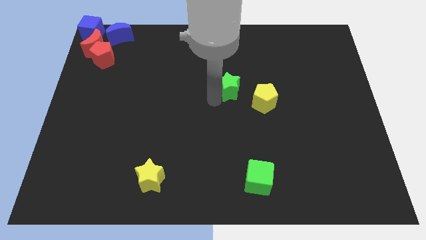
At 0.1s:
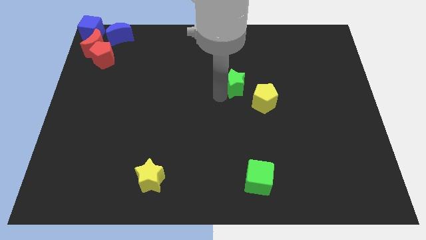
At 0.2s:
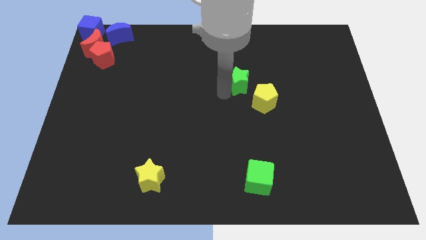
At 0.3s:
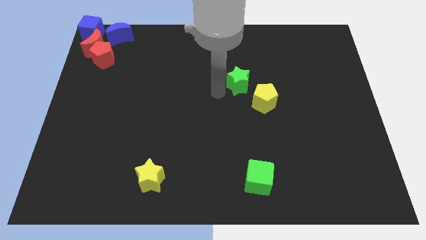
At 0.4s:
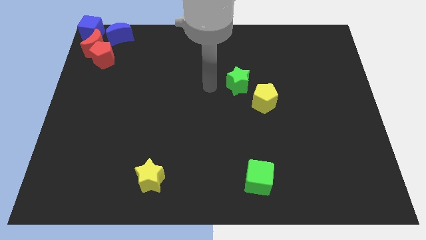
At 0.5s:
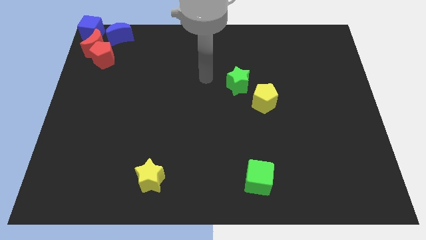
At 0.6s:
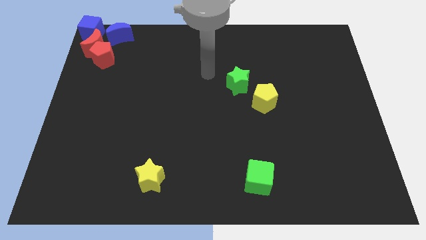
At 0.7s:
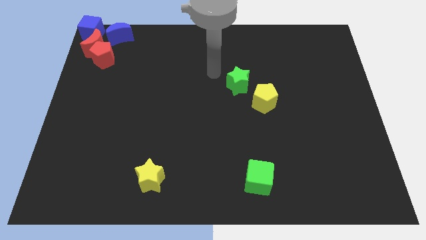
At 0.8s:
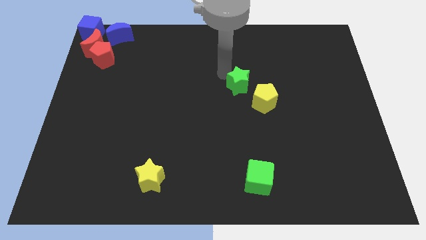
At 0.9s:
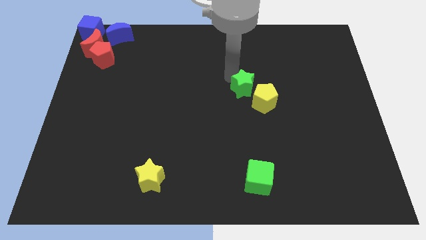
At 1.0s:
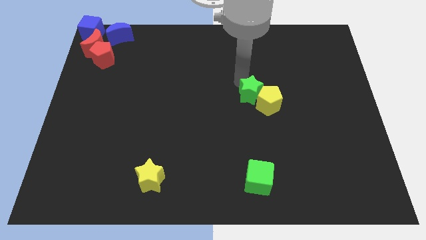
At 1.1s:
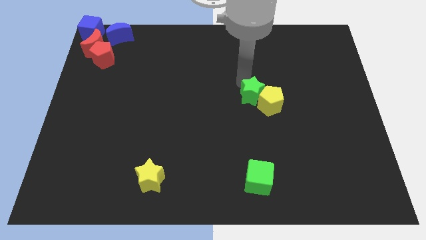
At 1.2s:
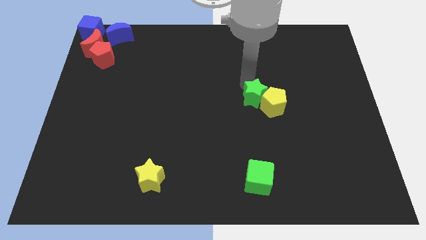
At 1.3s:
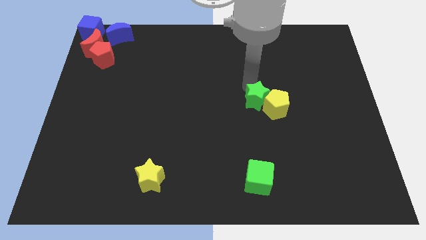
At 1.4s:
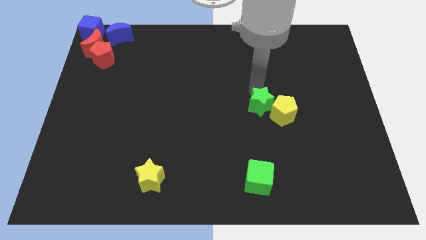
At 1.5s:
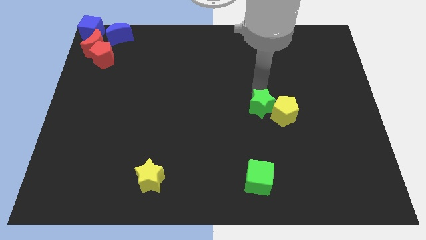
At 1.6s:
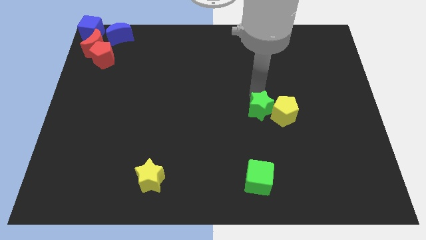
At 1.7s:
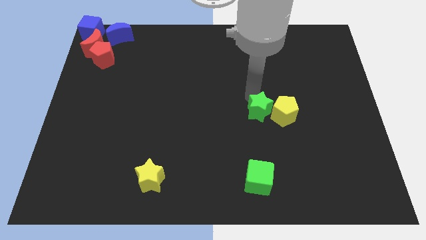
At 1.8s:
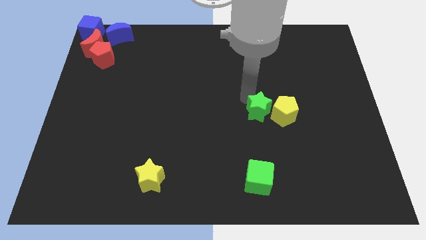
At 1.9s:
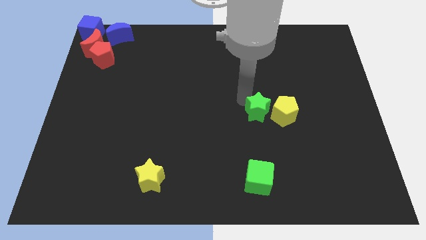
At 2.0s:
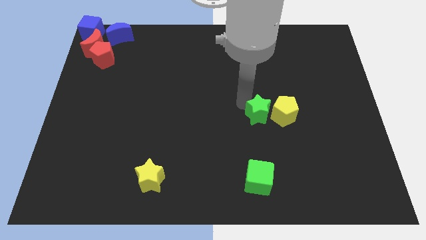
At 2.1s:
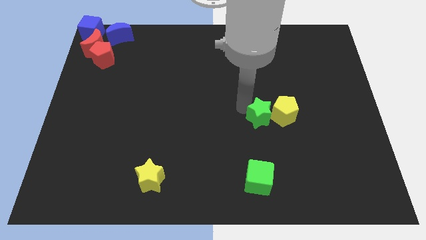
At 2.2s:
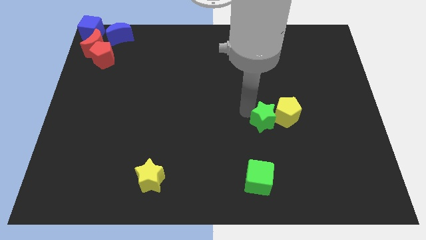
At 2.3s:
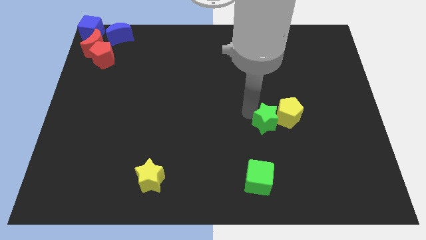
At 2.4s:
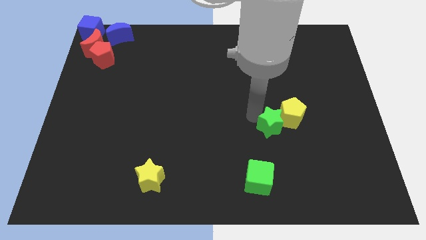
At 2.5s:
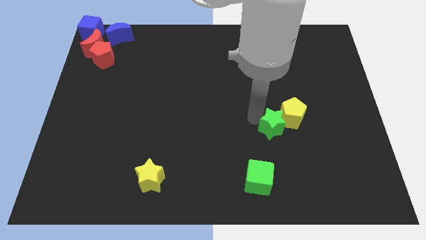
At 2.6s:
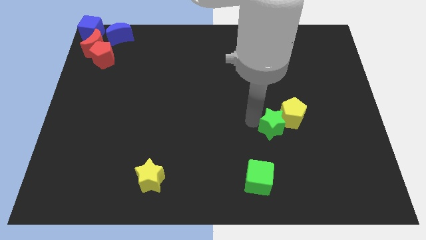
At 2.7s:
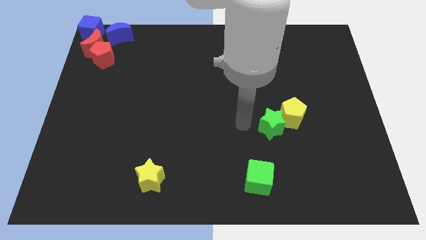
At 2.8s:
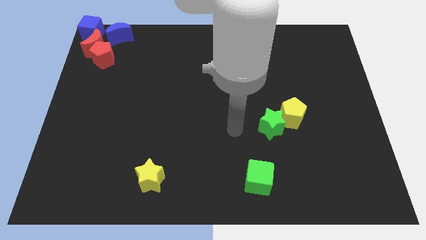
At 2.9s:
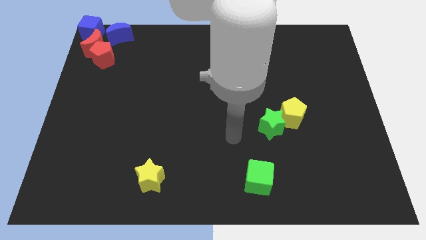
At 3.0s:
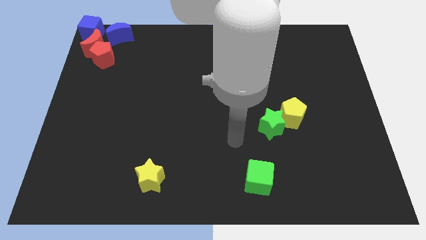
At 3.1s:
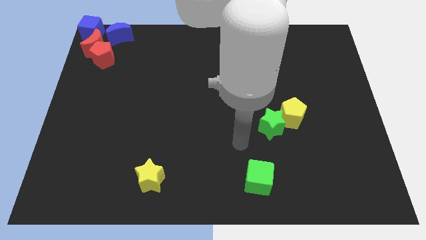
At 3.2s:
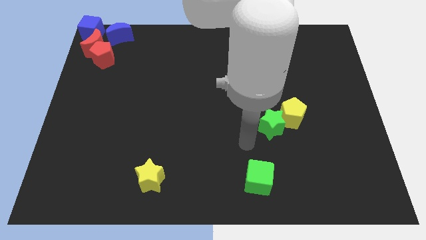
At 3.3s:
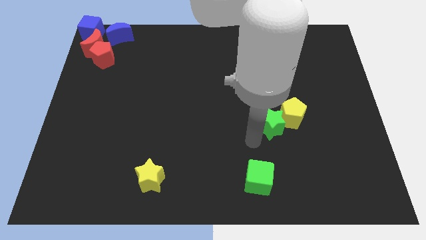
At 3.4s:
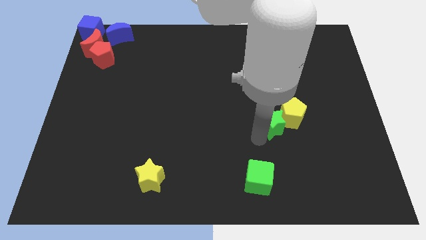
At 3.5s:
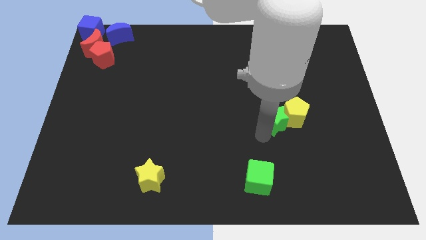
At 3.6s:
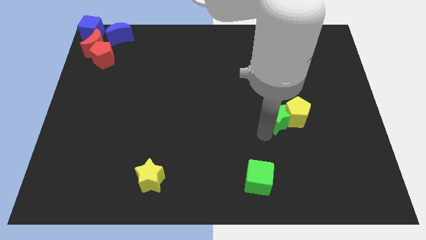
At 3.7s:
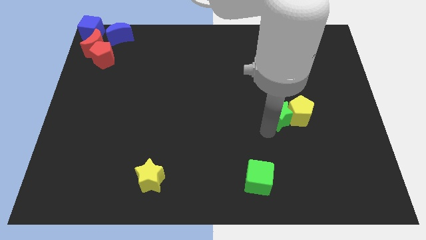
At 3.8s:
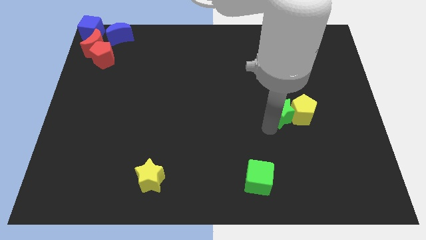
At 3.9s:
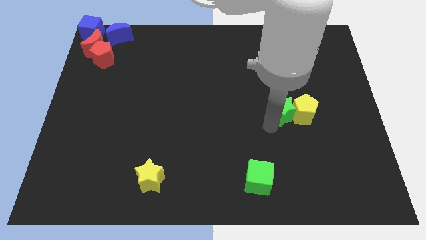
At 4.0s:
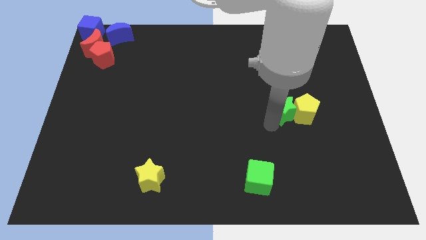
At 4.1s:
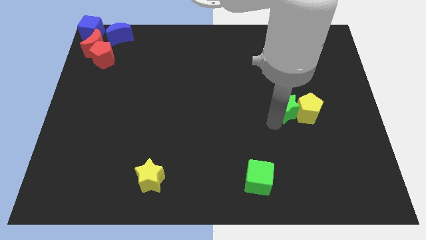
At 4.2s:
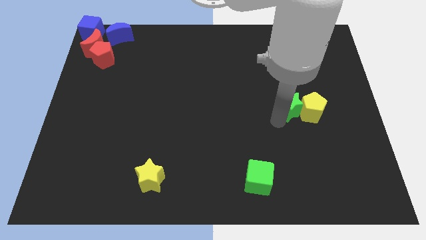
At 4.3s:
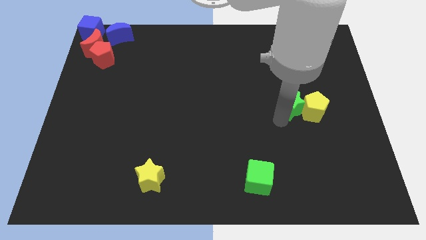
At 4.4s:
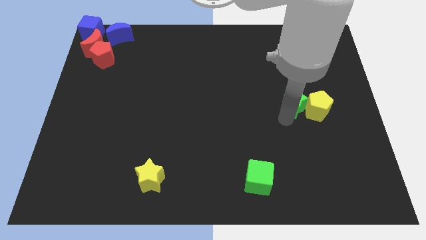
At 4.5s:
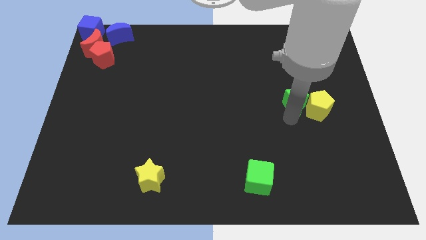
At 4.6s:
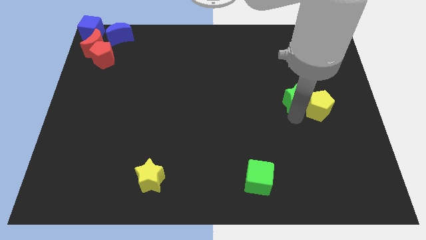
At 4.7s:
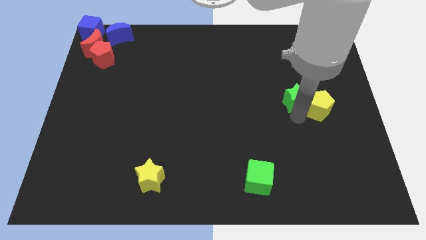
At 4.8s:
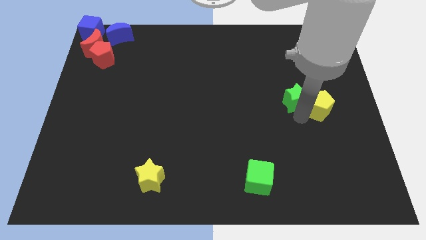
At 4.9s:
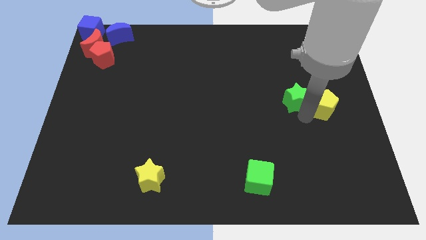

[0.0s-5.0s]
push green star into yellow pentagon

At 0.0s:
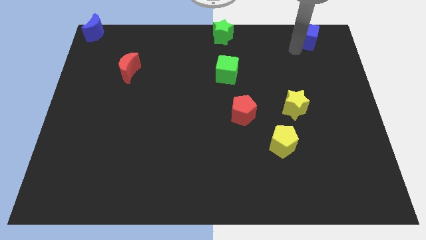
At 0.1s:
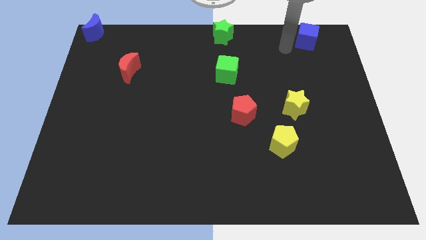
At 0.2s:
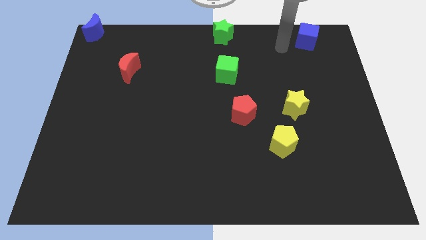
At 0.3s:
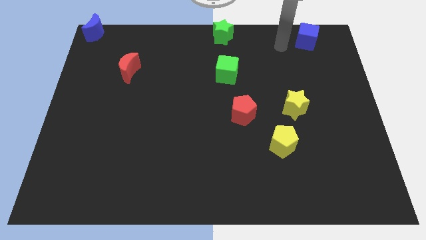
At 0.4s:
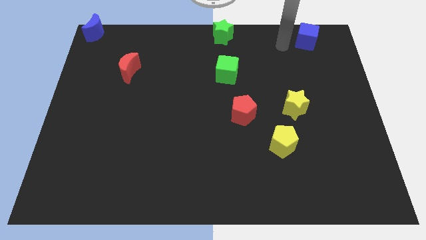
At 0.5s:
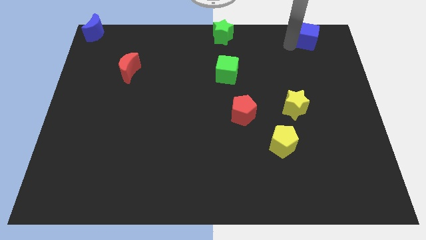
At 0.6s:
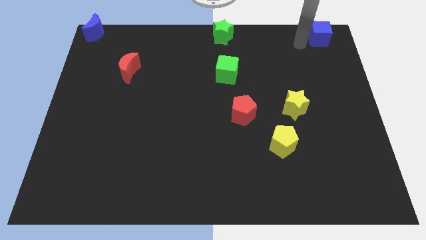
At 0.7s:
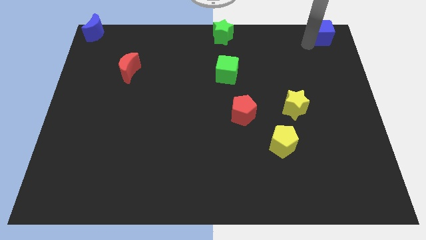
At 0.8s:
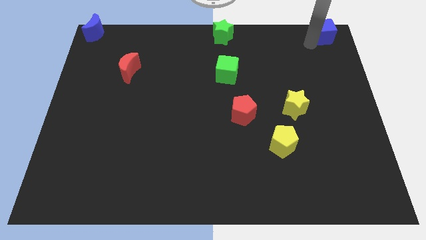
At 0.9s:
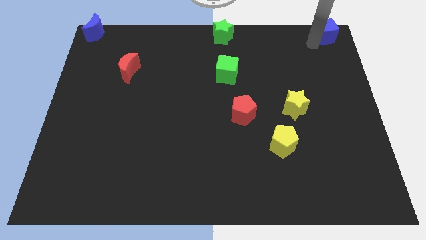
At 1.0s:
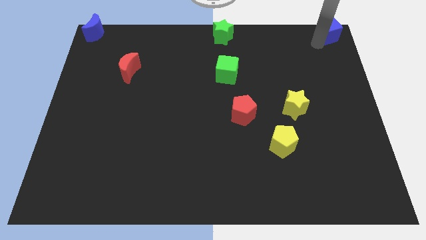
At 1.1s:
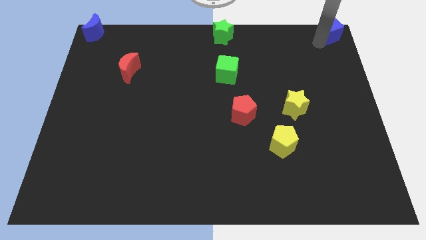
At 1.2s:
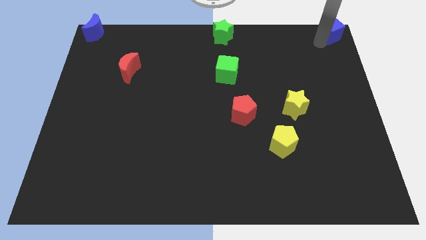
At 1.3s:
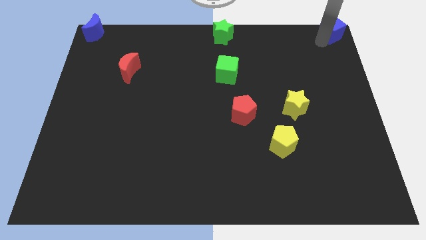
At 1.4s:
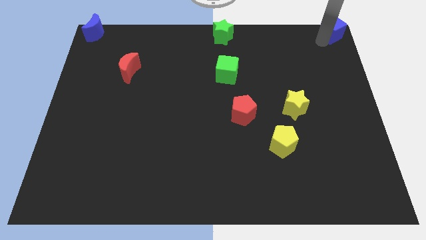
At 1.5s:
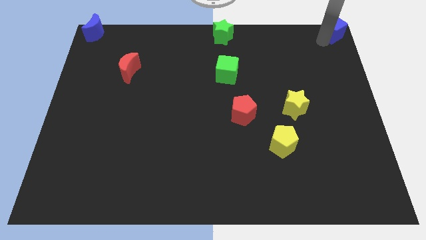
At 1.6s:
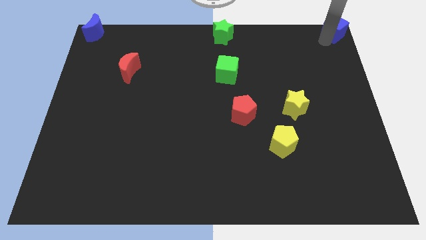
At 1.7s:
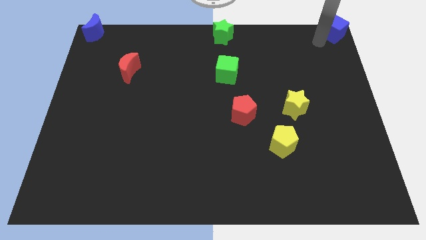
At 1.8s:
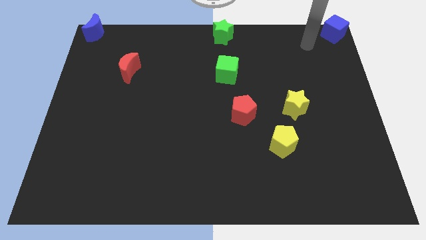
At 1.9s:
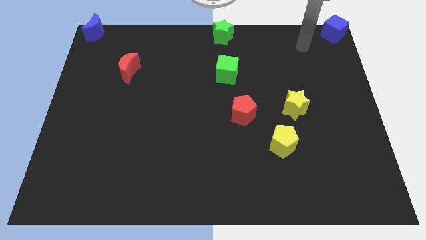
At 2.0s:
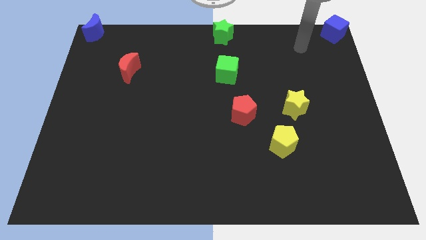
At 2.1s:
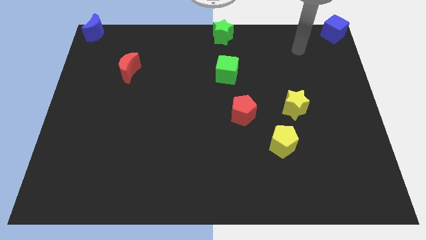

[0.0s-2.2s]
move the blue cube to the top right

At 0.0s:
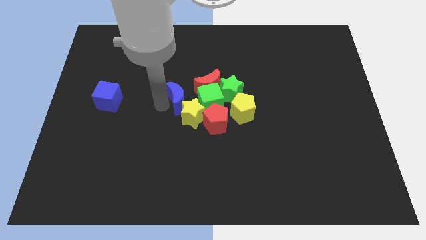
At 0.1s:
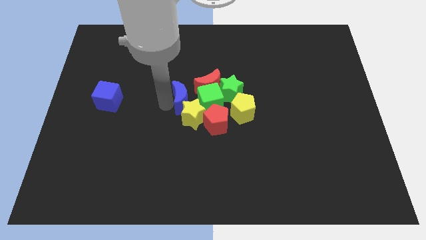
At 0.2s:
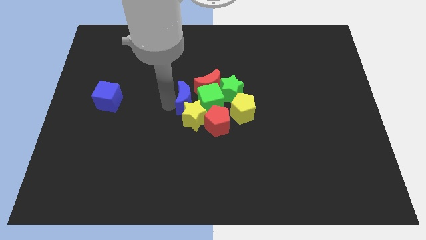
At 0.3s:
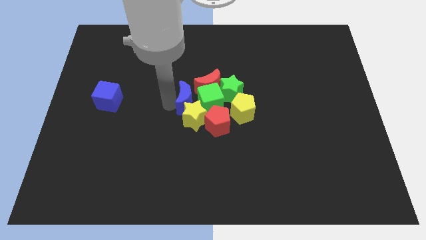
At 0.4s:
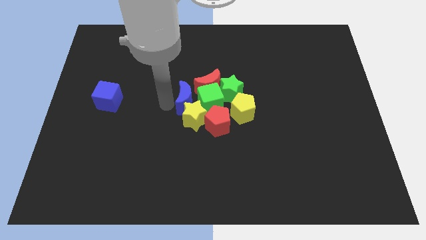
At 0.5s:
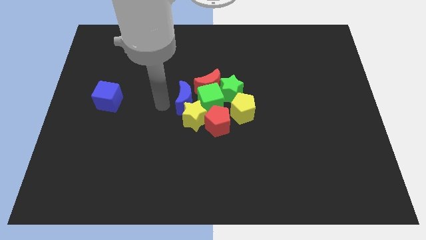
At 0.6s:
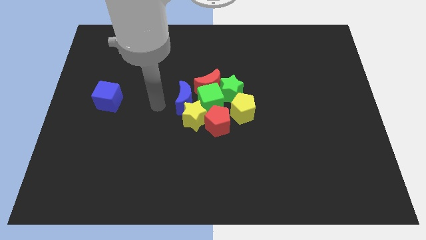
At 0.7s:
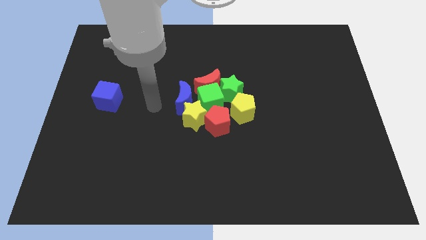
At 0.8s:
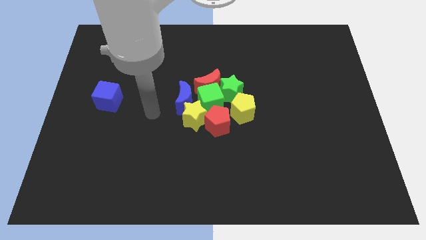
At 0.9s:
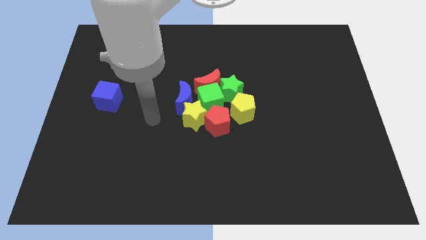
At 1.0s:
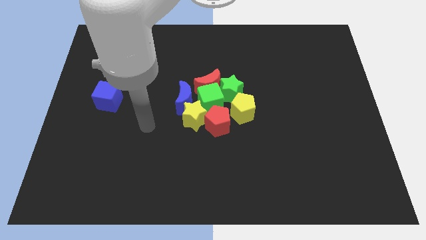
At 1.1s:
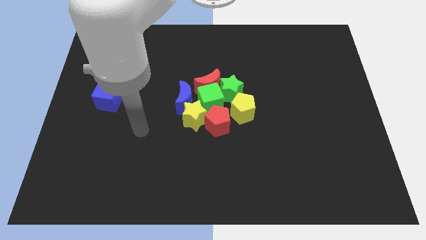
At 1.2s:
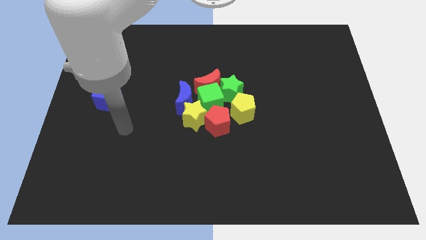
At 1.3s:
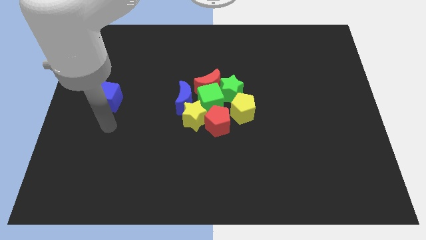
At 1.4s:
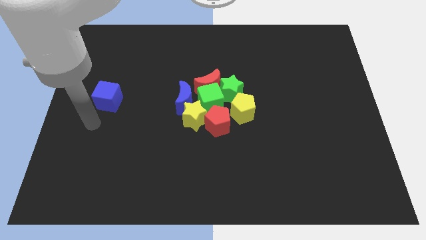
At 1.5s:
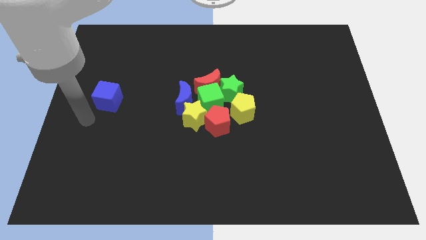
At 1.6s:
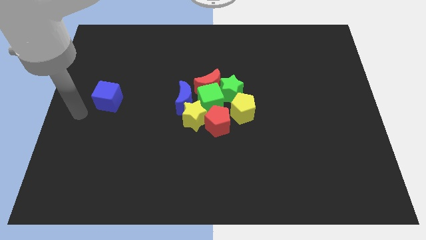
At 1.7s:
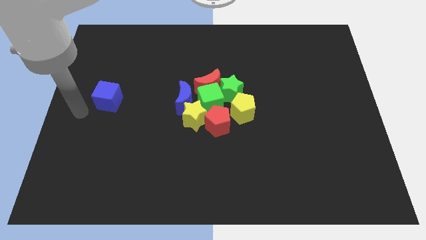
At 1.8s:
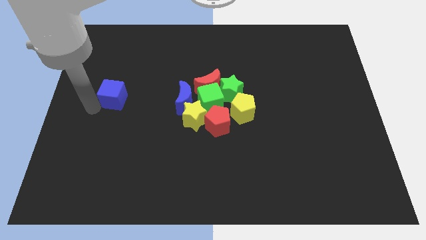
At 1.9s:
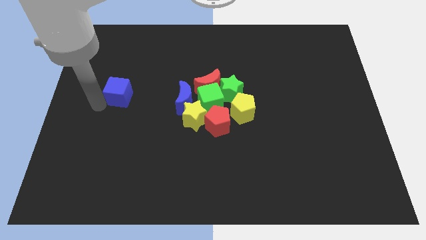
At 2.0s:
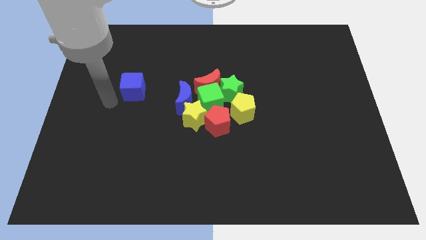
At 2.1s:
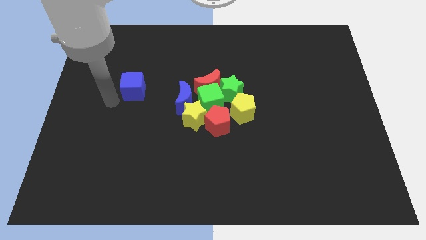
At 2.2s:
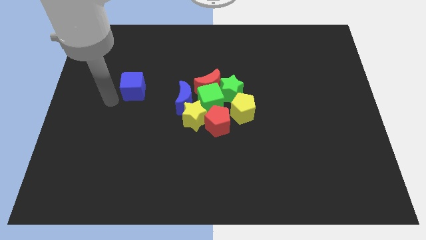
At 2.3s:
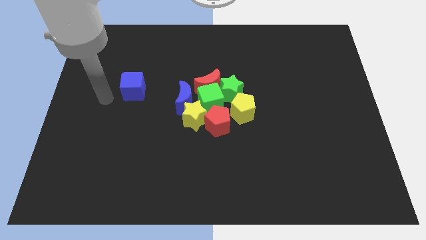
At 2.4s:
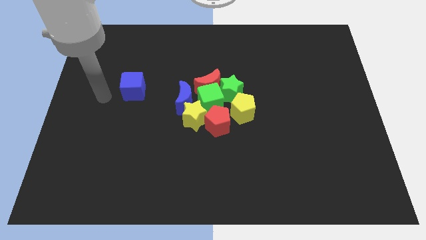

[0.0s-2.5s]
move your arm from blue moon to the left of blue cube
